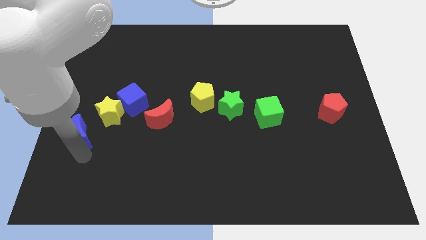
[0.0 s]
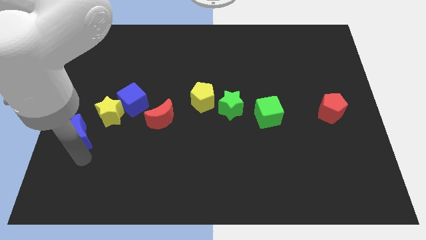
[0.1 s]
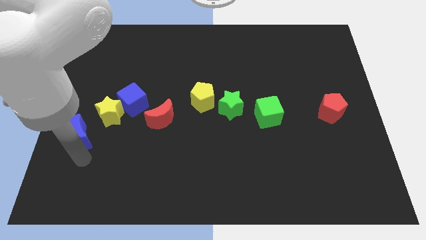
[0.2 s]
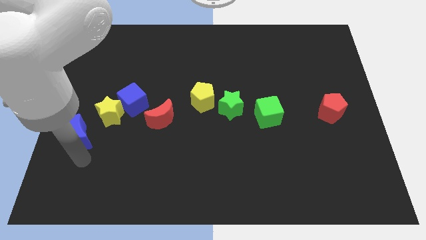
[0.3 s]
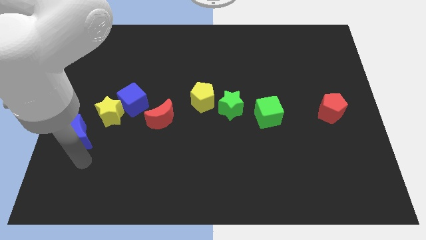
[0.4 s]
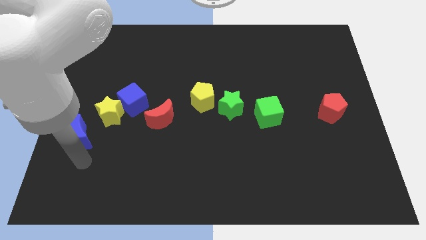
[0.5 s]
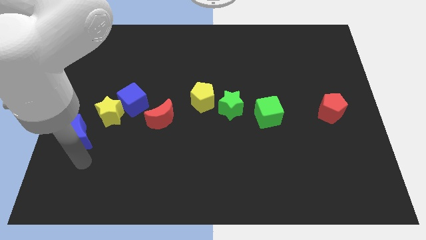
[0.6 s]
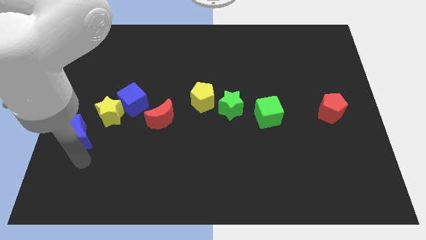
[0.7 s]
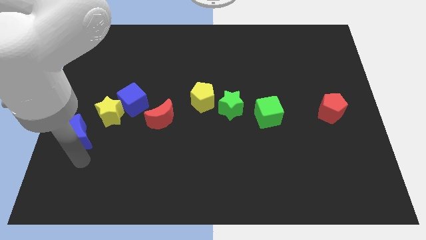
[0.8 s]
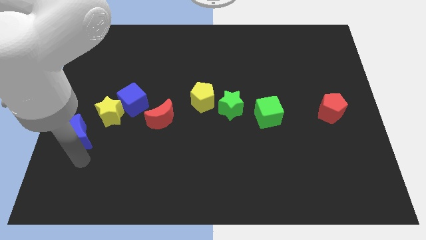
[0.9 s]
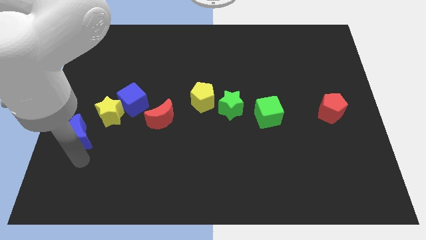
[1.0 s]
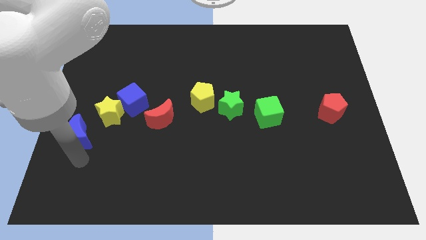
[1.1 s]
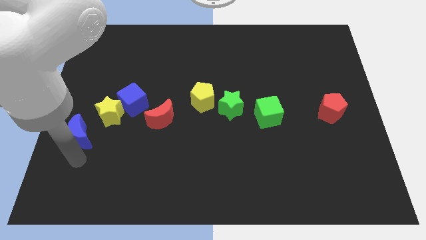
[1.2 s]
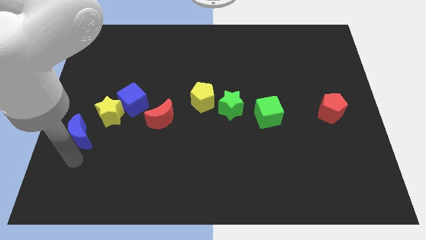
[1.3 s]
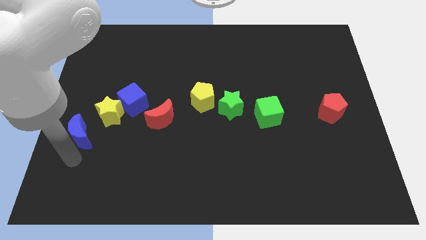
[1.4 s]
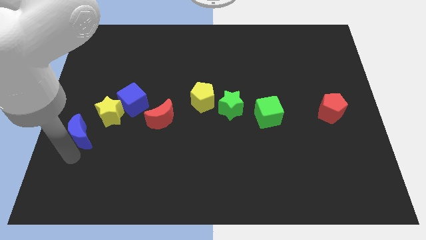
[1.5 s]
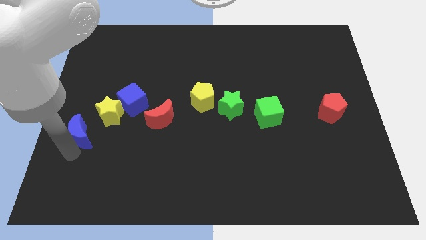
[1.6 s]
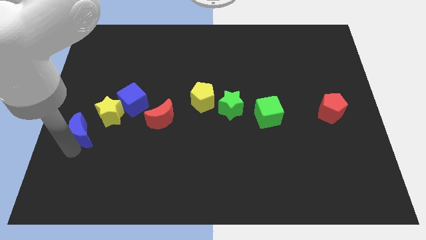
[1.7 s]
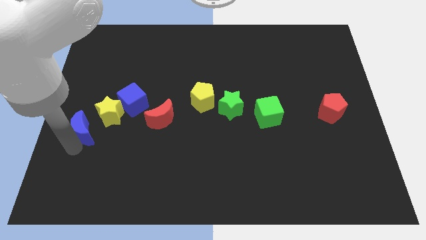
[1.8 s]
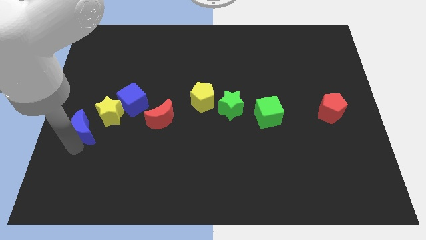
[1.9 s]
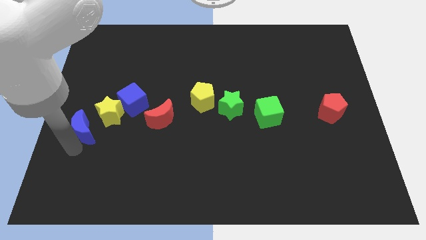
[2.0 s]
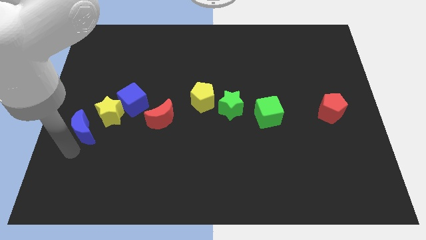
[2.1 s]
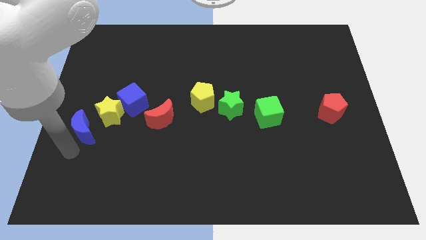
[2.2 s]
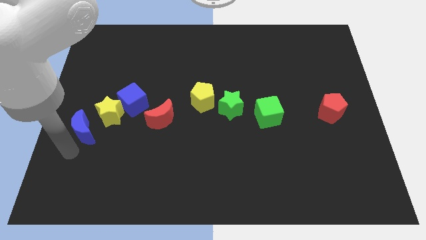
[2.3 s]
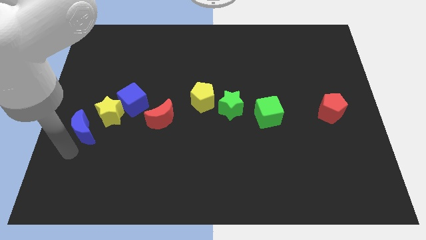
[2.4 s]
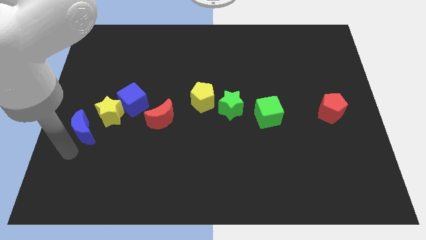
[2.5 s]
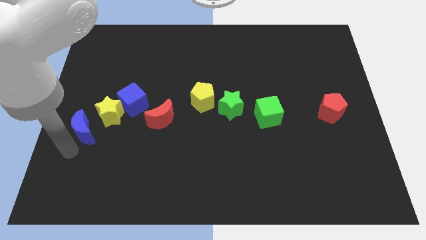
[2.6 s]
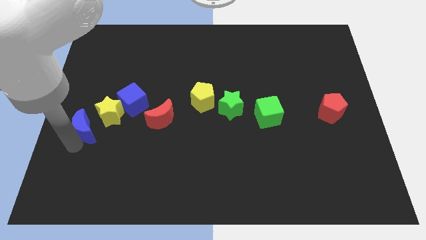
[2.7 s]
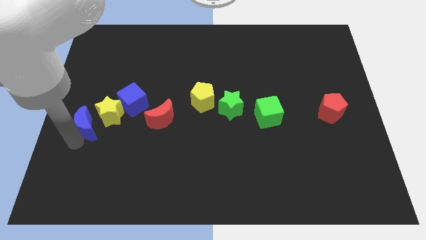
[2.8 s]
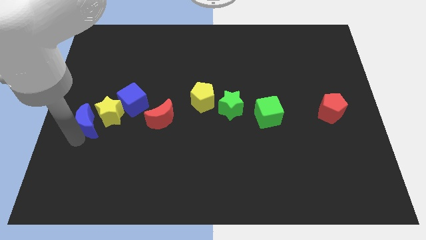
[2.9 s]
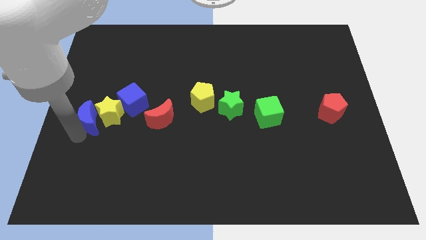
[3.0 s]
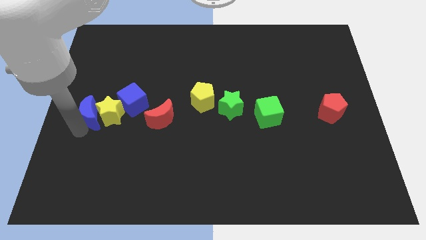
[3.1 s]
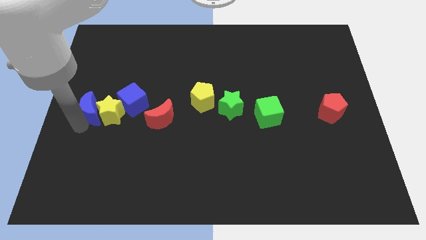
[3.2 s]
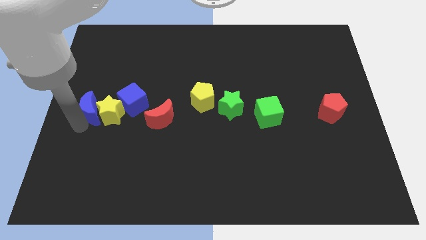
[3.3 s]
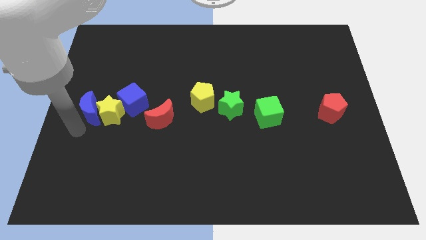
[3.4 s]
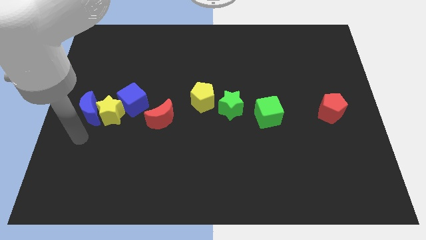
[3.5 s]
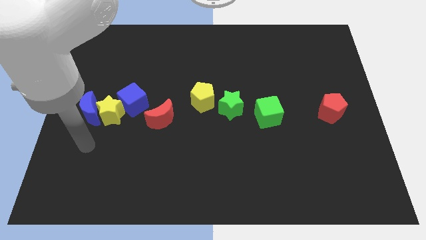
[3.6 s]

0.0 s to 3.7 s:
slide the blue moon to the left of the yellow star

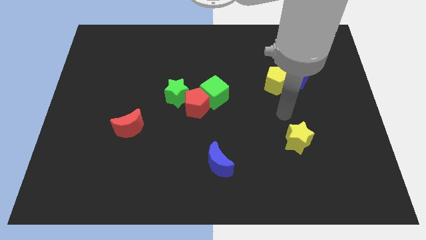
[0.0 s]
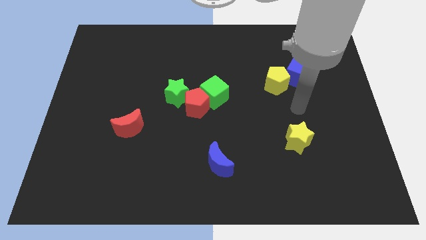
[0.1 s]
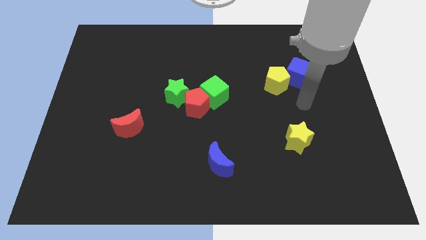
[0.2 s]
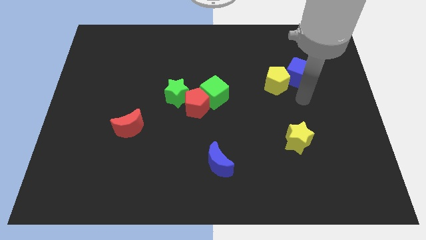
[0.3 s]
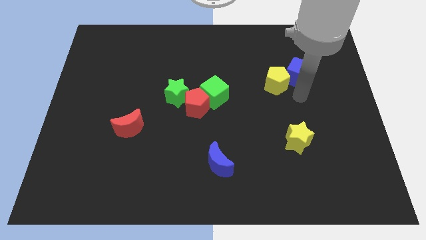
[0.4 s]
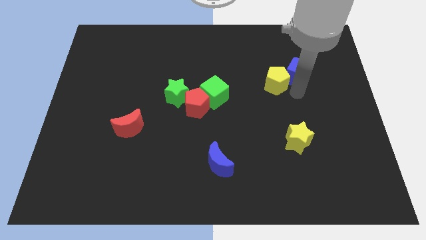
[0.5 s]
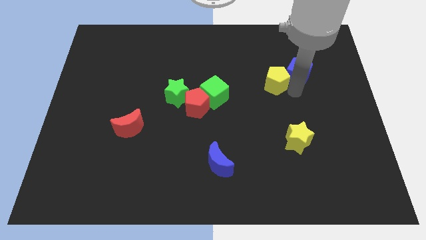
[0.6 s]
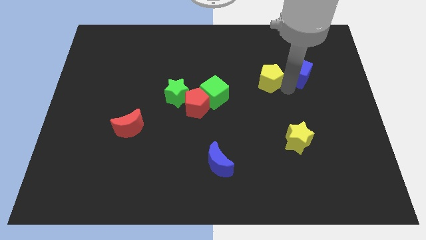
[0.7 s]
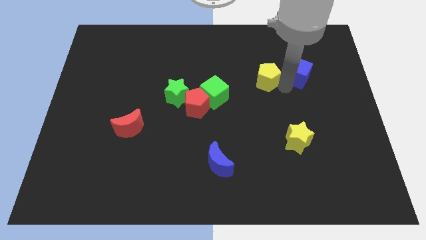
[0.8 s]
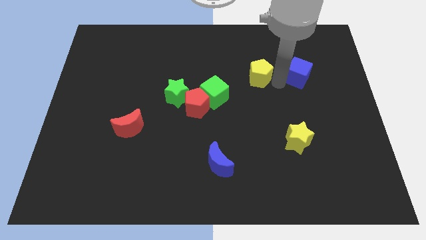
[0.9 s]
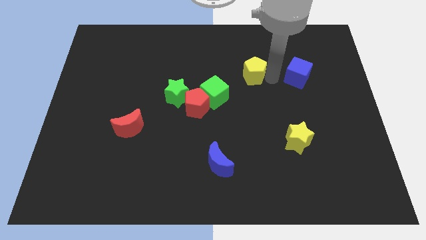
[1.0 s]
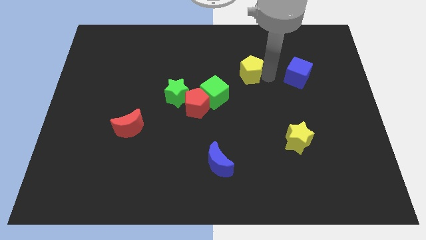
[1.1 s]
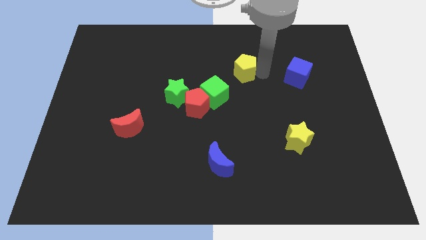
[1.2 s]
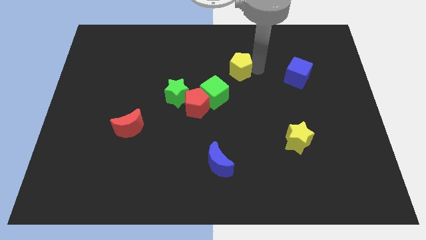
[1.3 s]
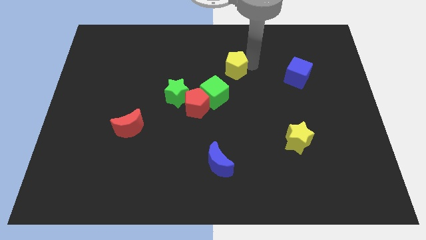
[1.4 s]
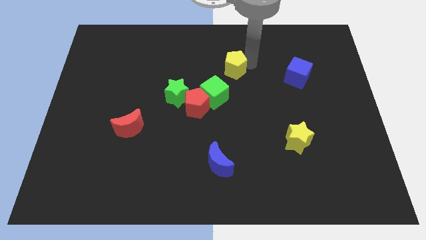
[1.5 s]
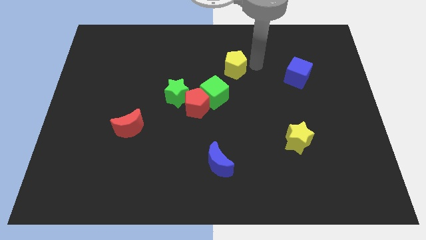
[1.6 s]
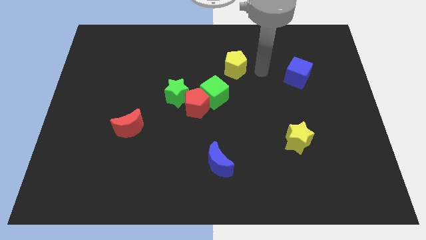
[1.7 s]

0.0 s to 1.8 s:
place the yellow pentagon diagonally to the green cube

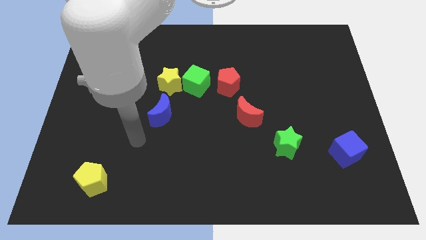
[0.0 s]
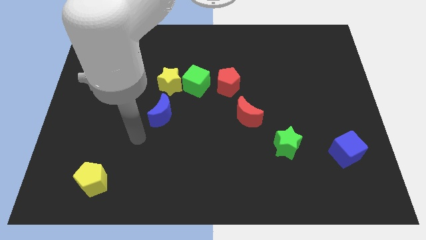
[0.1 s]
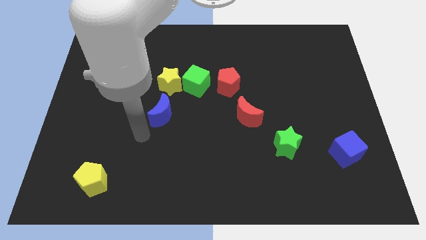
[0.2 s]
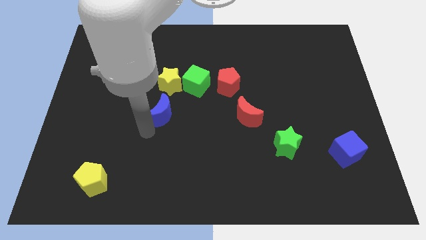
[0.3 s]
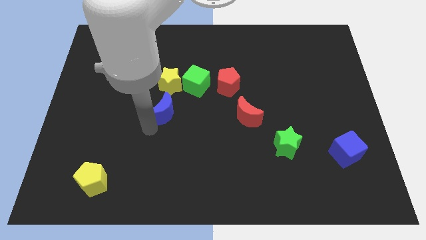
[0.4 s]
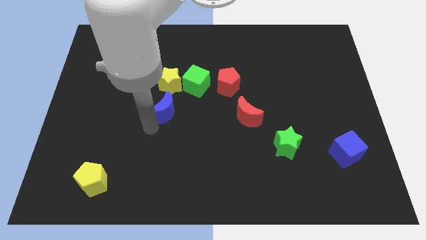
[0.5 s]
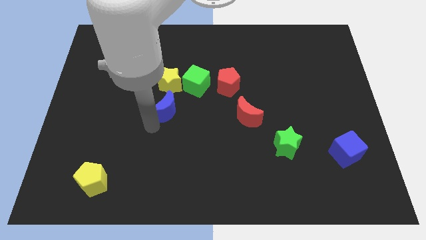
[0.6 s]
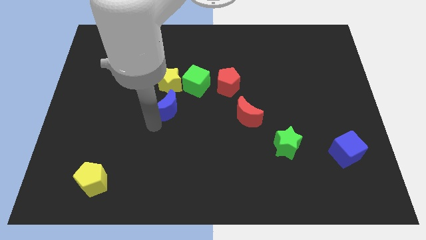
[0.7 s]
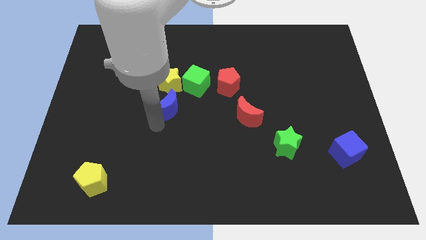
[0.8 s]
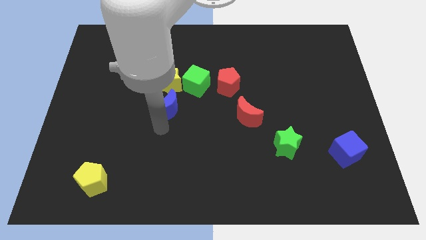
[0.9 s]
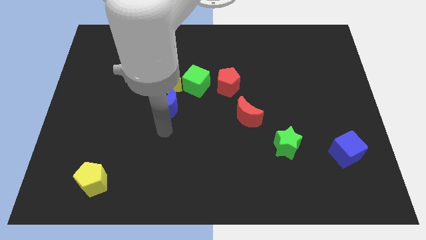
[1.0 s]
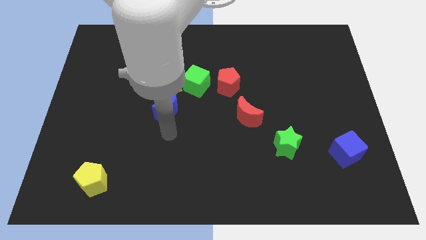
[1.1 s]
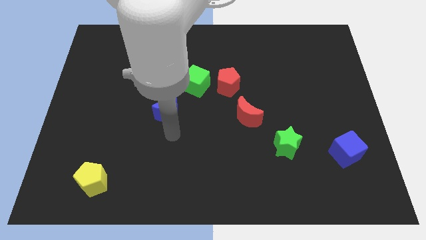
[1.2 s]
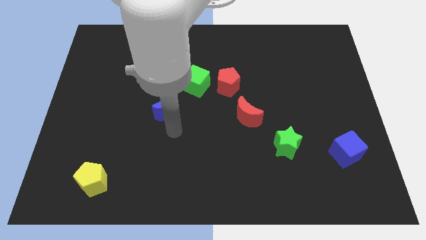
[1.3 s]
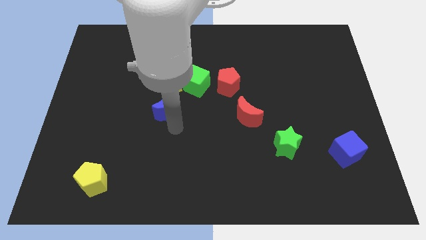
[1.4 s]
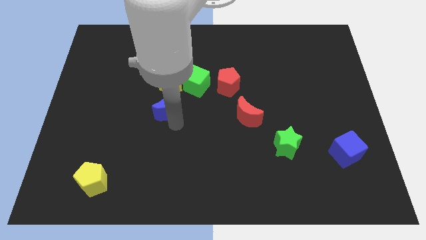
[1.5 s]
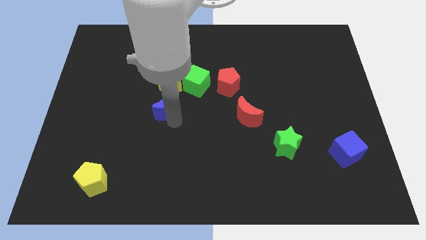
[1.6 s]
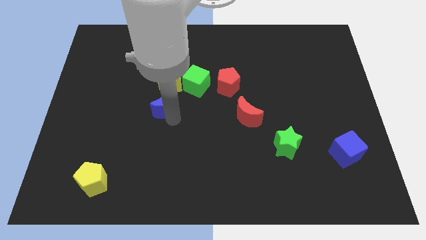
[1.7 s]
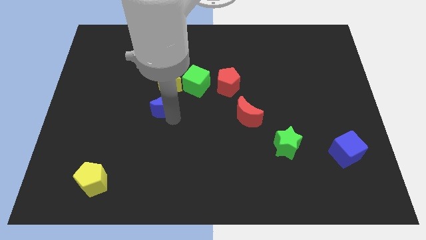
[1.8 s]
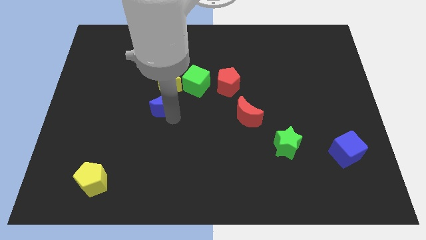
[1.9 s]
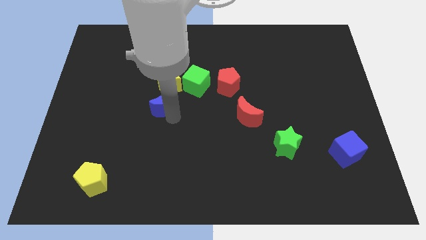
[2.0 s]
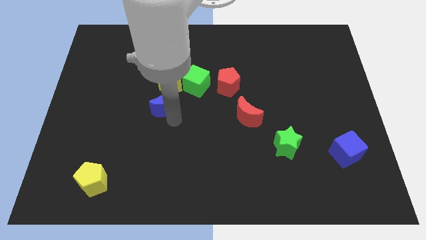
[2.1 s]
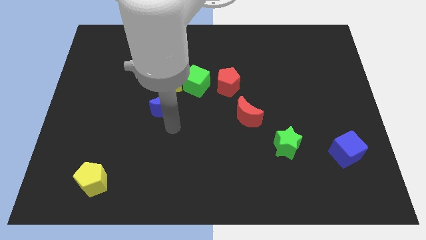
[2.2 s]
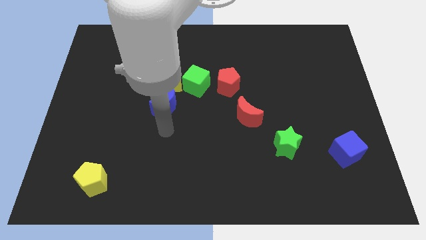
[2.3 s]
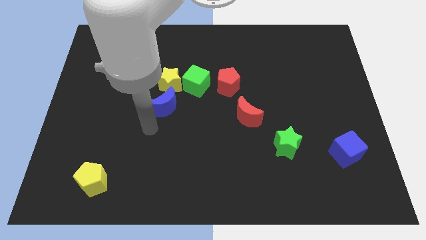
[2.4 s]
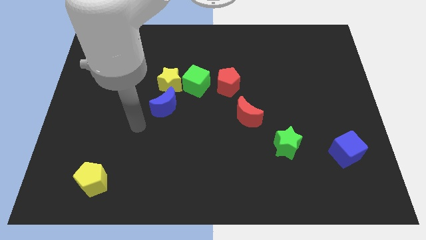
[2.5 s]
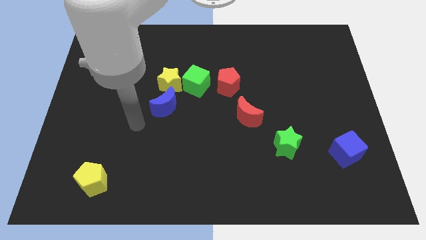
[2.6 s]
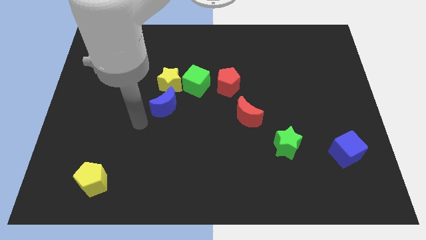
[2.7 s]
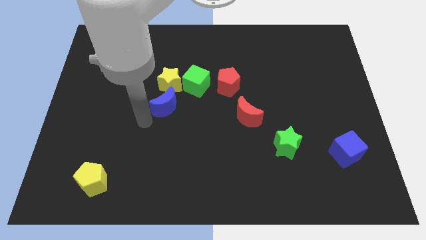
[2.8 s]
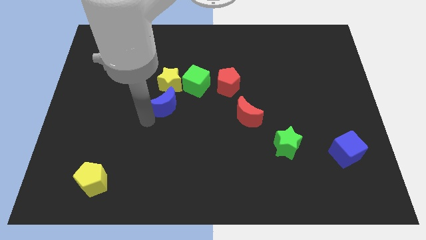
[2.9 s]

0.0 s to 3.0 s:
place the blue crescent below the yellow star

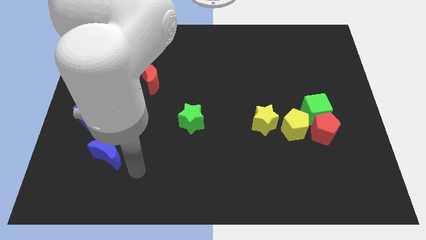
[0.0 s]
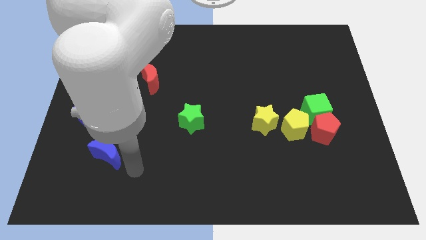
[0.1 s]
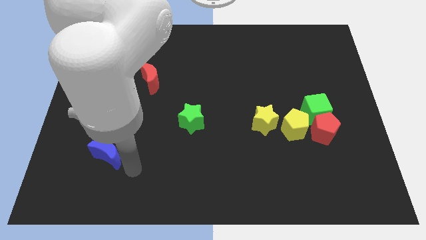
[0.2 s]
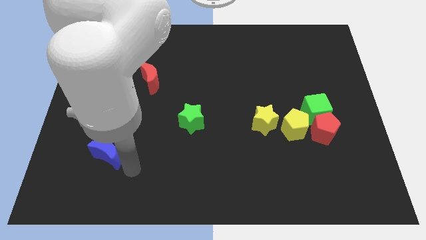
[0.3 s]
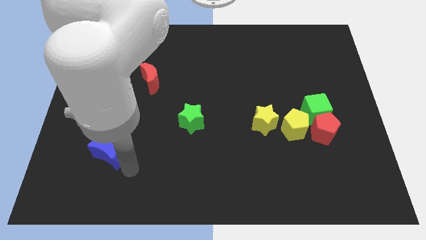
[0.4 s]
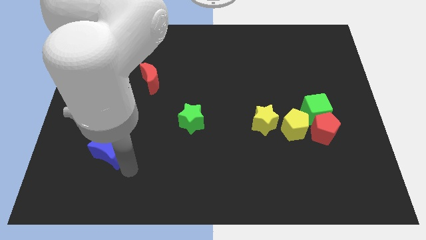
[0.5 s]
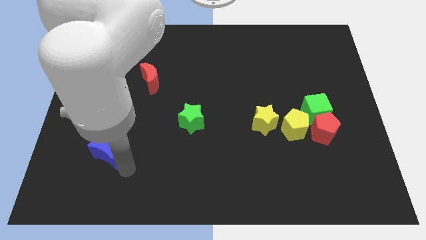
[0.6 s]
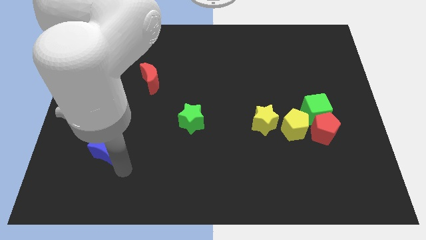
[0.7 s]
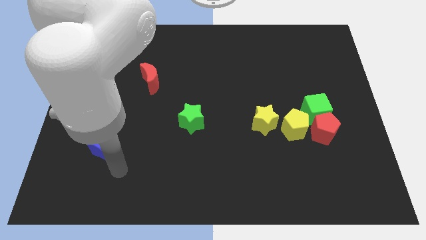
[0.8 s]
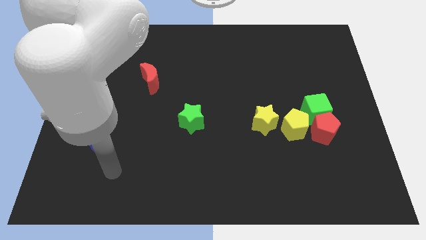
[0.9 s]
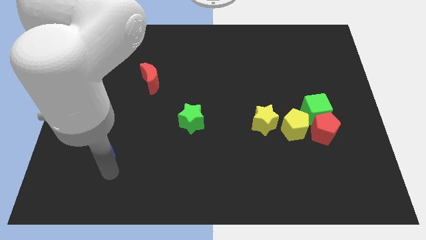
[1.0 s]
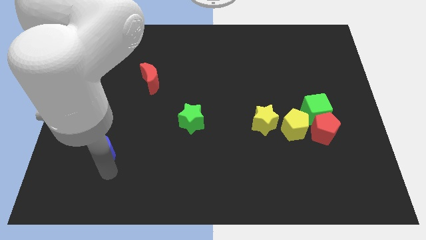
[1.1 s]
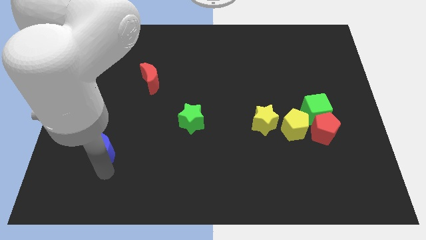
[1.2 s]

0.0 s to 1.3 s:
place your arm at the bottom of the blue crescent
